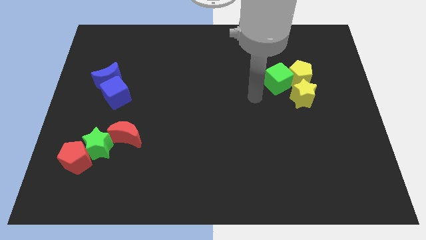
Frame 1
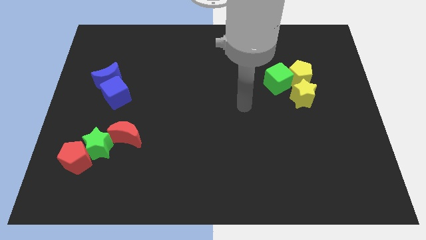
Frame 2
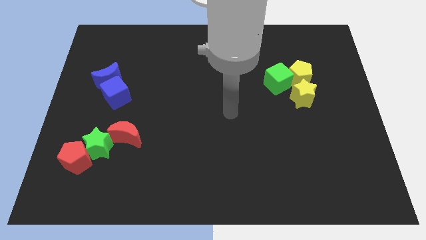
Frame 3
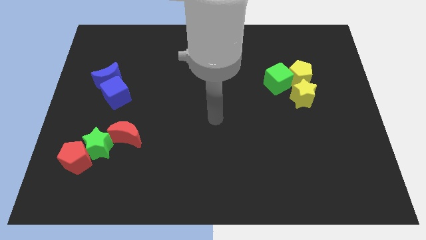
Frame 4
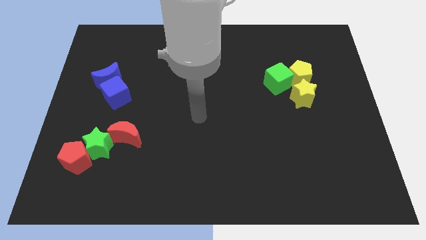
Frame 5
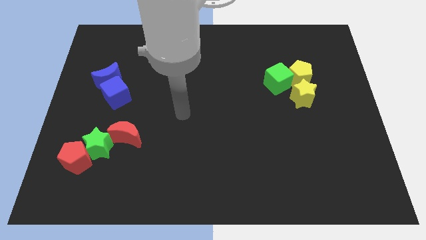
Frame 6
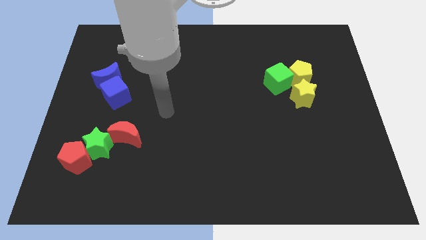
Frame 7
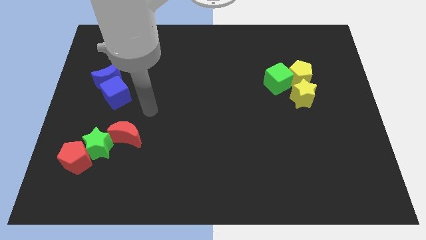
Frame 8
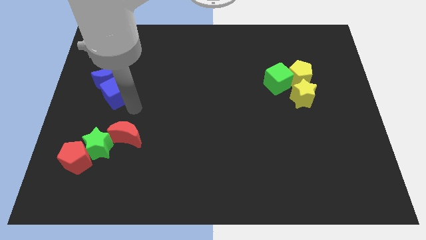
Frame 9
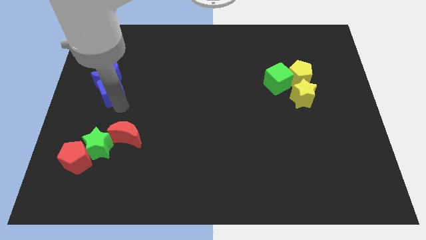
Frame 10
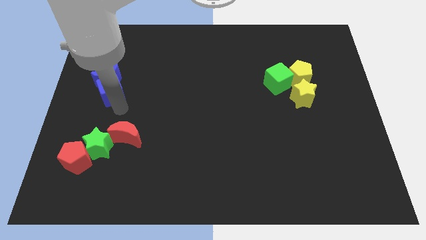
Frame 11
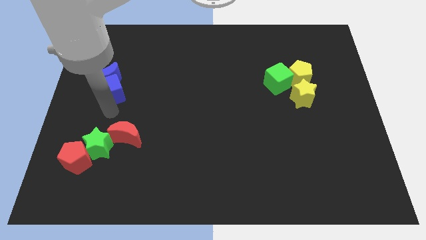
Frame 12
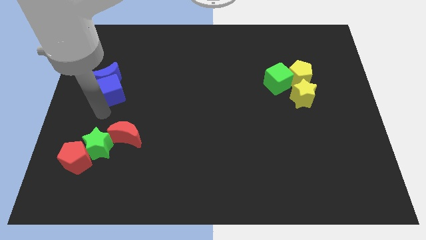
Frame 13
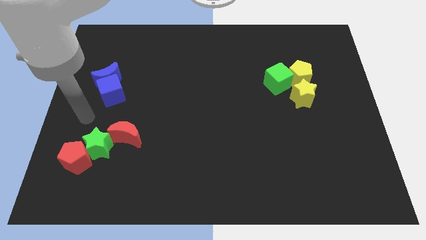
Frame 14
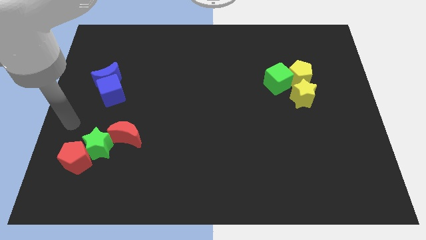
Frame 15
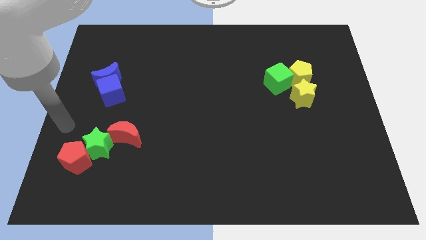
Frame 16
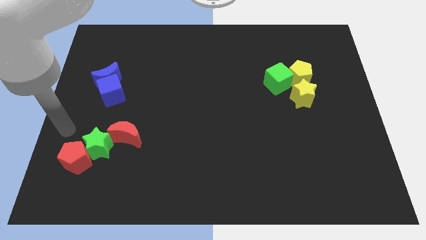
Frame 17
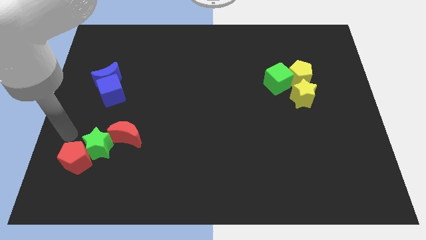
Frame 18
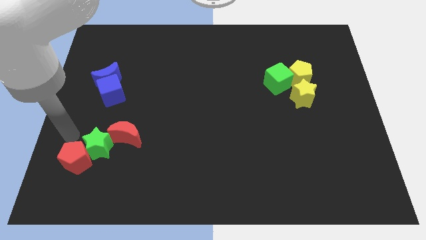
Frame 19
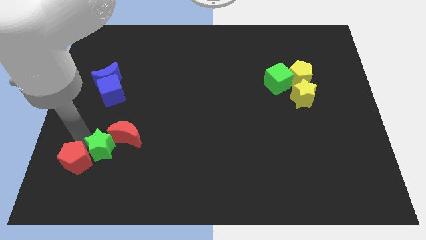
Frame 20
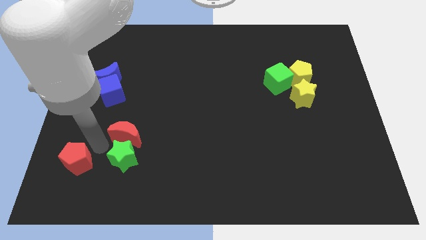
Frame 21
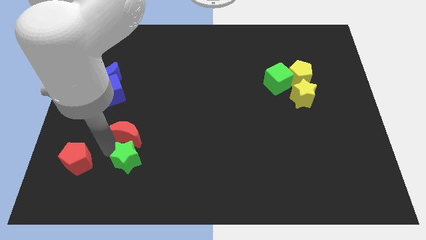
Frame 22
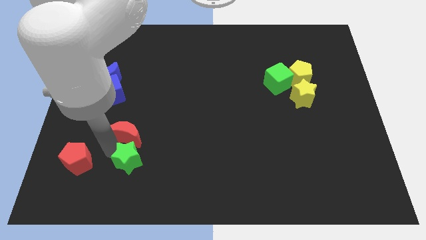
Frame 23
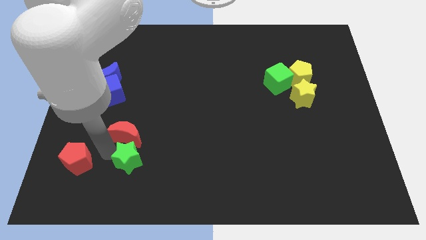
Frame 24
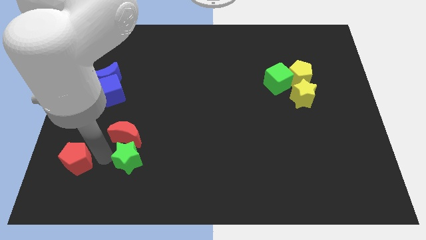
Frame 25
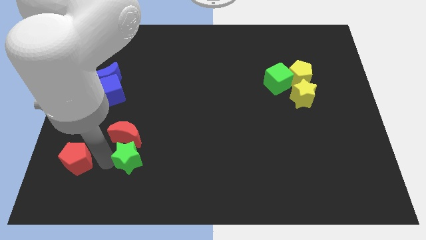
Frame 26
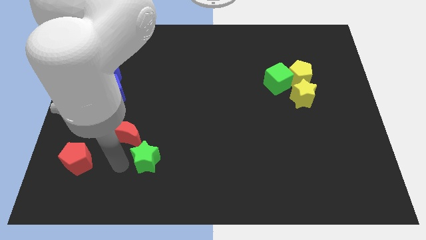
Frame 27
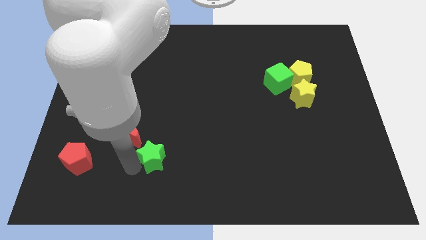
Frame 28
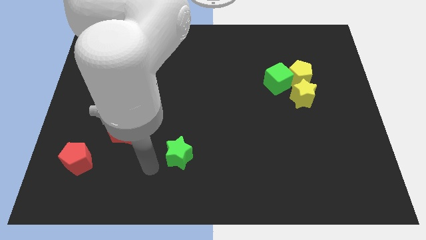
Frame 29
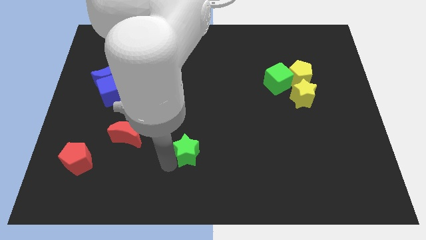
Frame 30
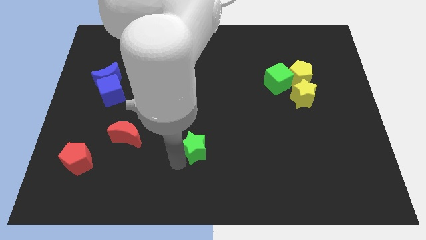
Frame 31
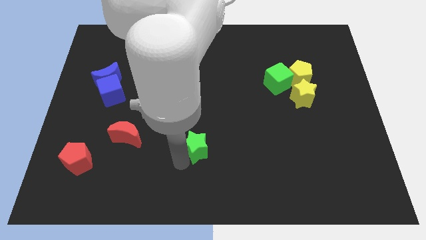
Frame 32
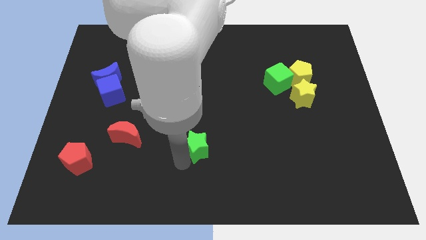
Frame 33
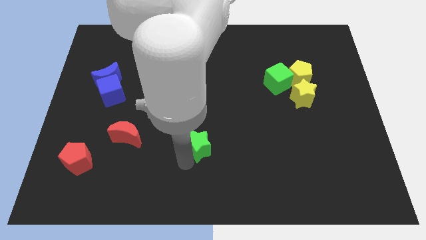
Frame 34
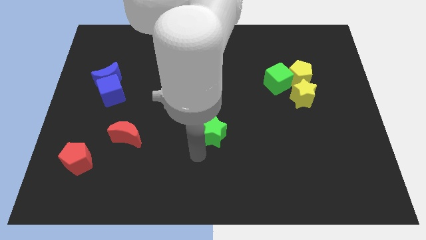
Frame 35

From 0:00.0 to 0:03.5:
place the green star to the right of the red crescent

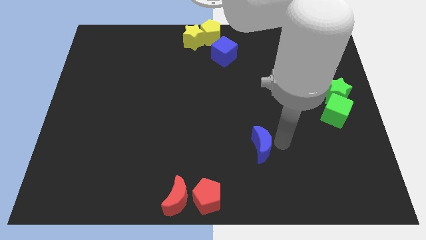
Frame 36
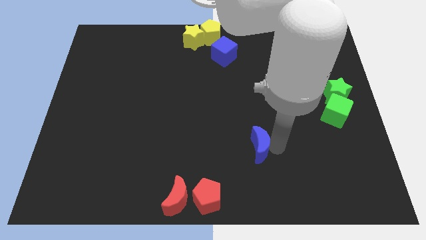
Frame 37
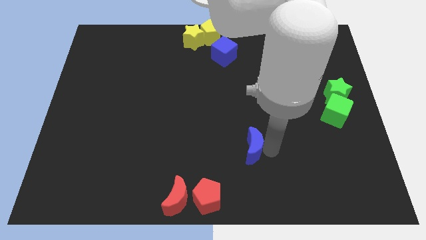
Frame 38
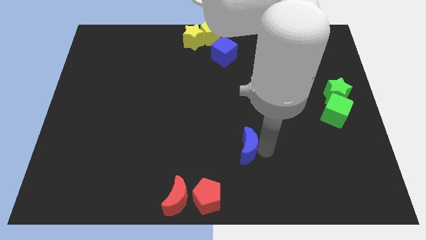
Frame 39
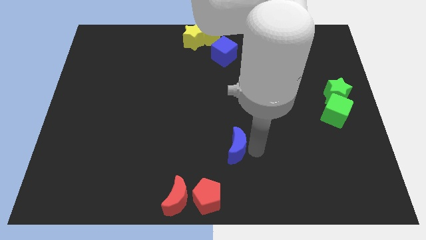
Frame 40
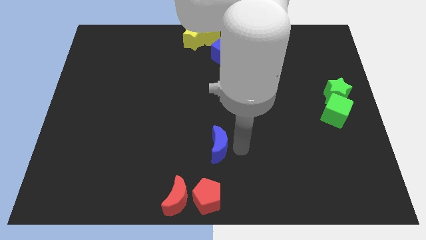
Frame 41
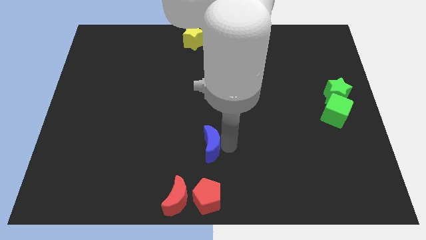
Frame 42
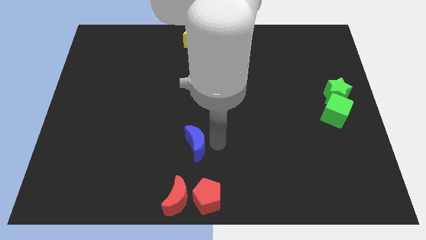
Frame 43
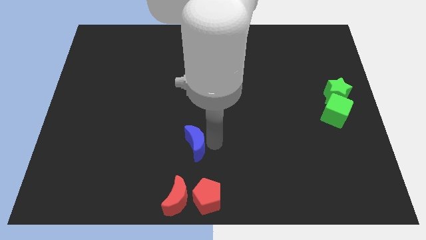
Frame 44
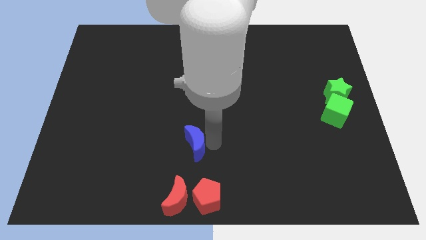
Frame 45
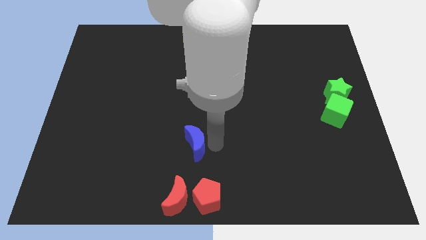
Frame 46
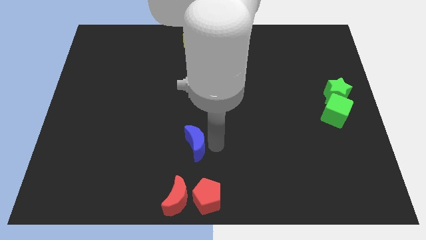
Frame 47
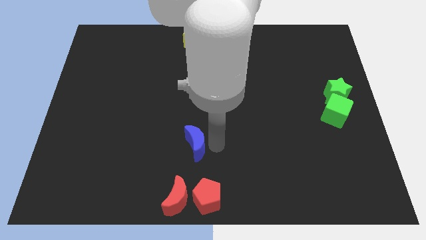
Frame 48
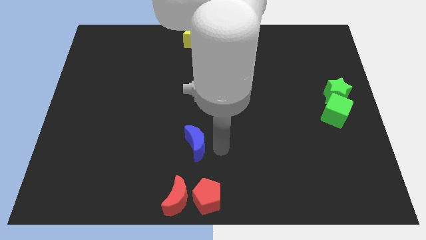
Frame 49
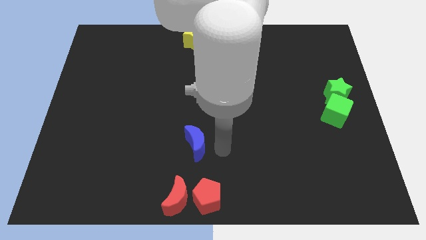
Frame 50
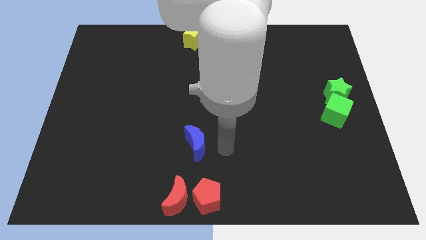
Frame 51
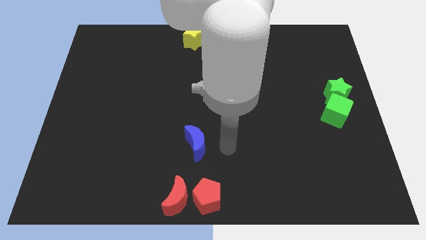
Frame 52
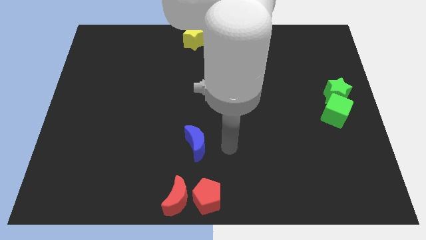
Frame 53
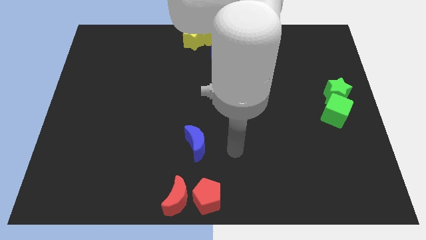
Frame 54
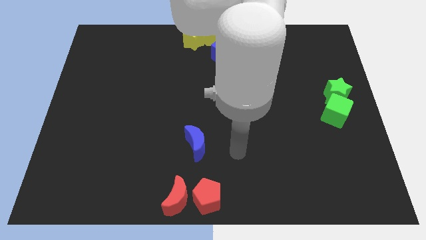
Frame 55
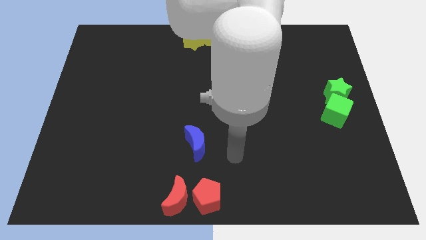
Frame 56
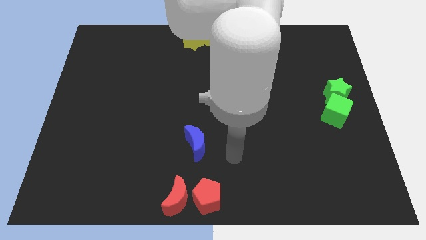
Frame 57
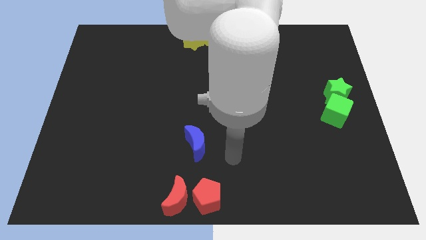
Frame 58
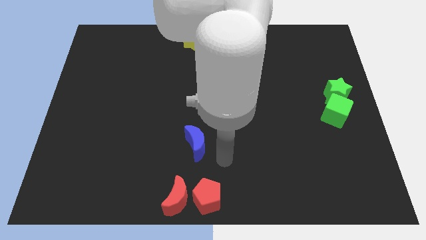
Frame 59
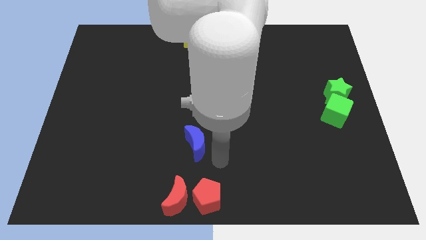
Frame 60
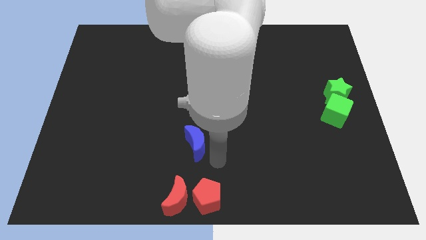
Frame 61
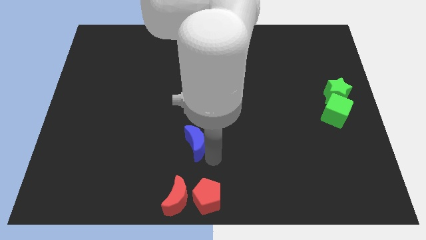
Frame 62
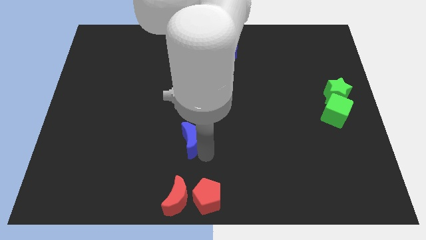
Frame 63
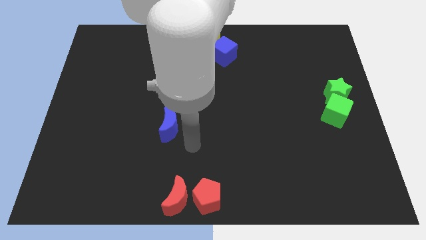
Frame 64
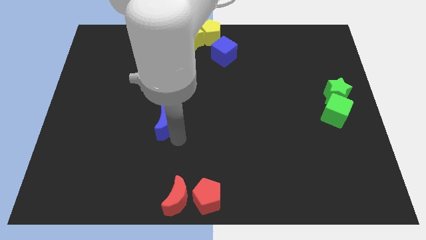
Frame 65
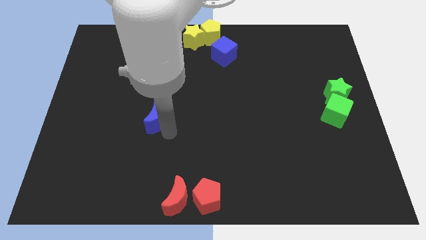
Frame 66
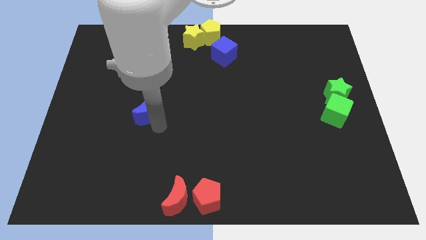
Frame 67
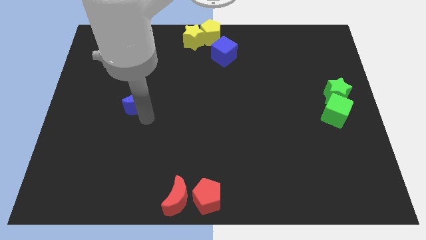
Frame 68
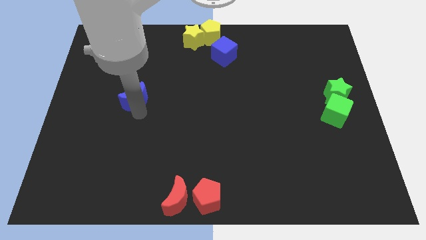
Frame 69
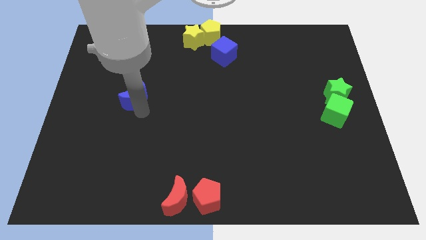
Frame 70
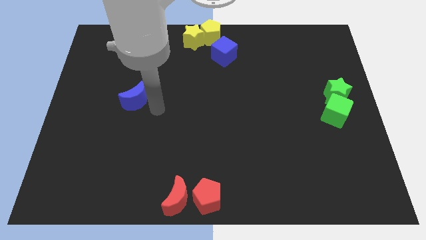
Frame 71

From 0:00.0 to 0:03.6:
place the blue moon to the left of the green star

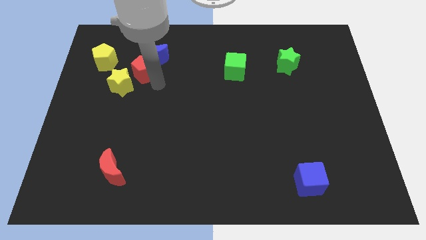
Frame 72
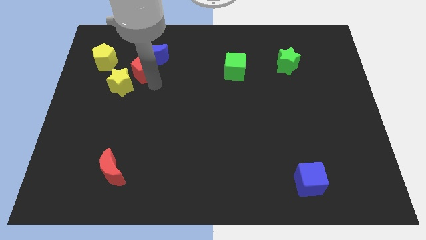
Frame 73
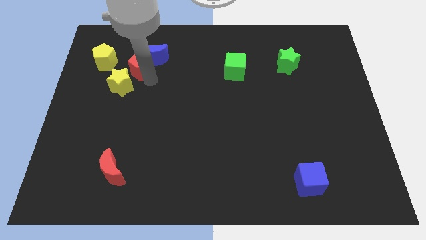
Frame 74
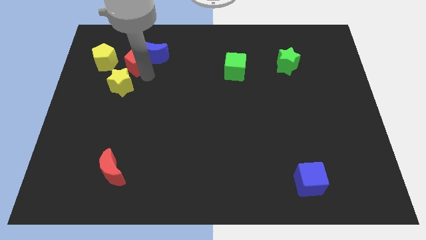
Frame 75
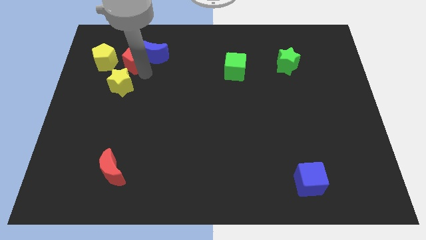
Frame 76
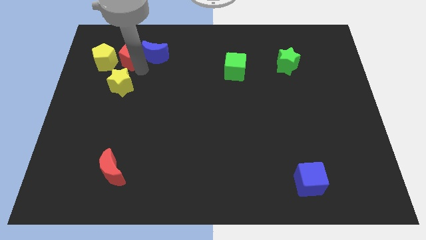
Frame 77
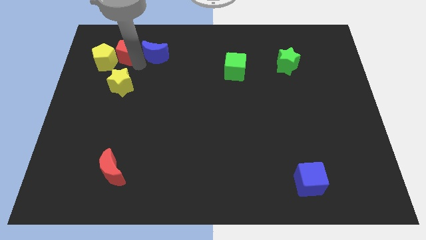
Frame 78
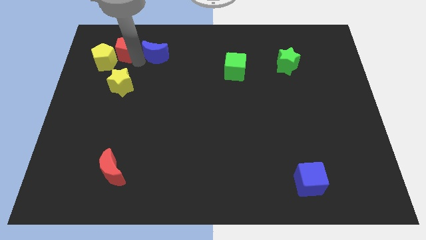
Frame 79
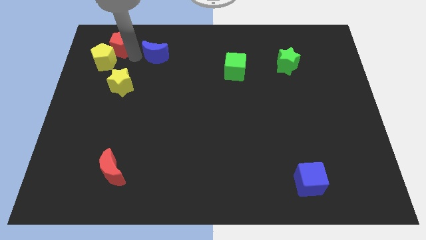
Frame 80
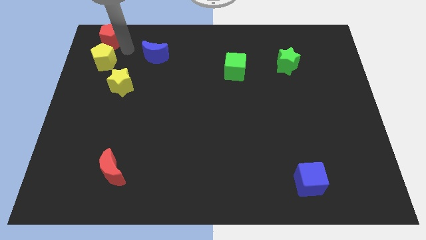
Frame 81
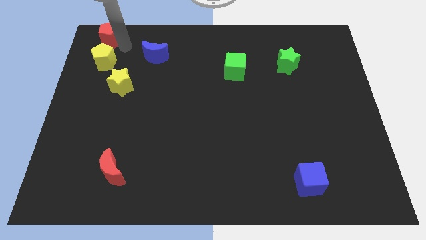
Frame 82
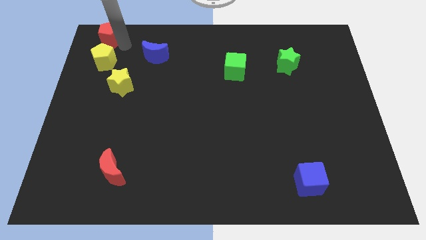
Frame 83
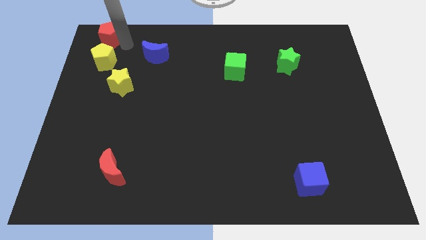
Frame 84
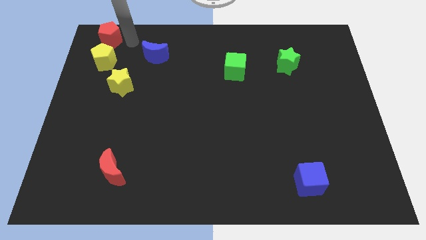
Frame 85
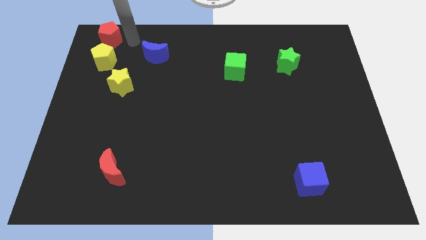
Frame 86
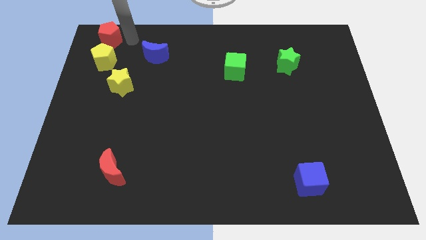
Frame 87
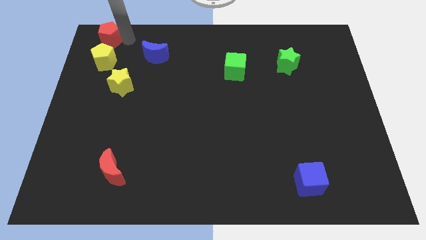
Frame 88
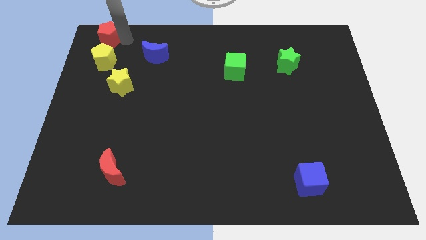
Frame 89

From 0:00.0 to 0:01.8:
push the red pentagon to the top of the yellow pentagon
